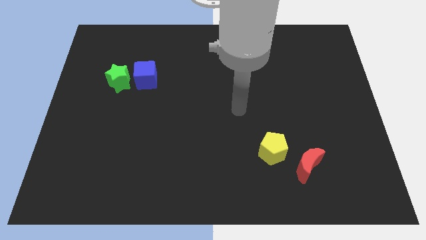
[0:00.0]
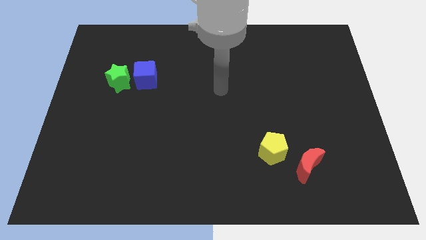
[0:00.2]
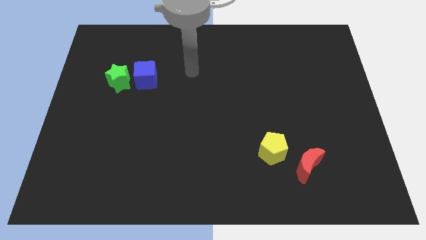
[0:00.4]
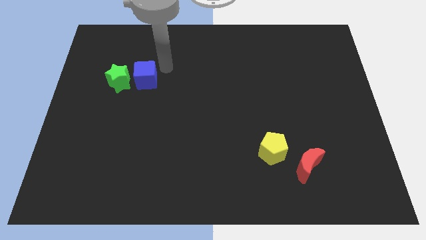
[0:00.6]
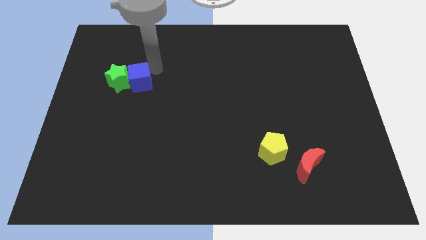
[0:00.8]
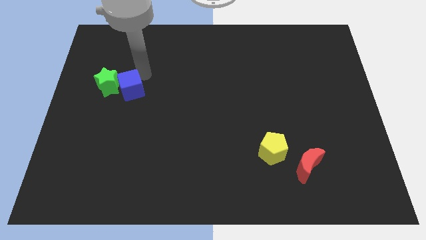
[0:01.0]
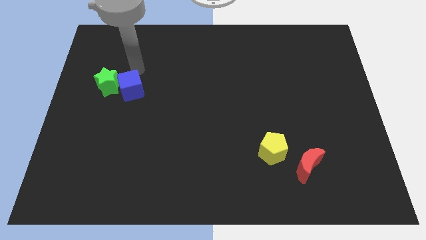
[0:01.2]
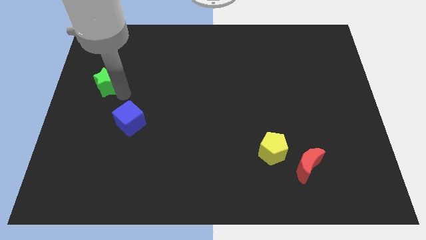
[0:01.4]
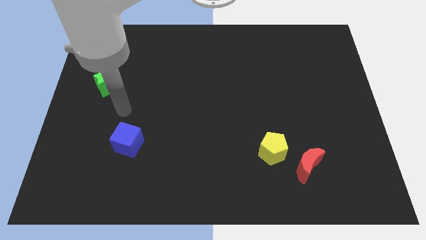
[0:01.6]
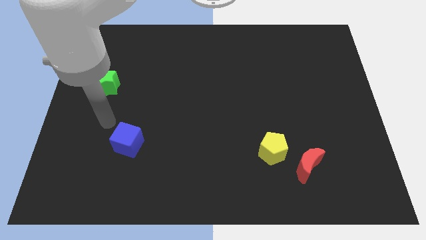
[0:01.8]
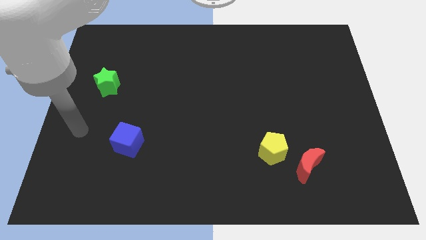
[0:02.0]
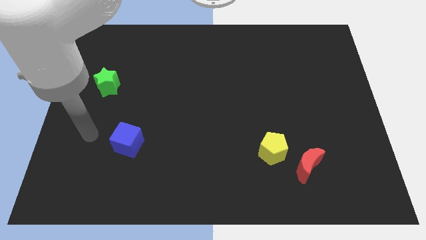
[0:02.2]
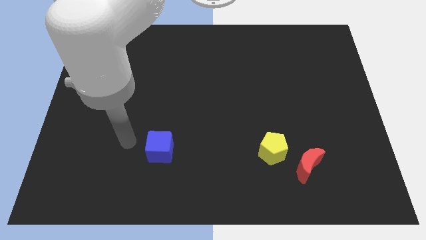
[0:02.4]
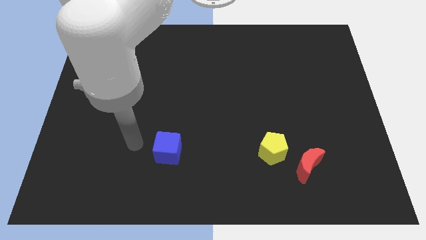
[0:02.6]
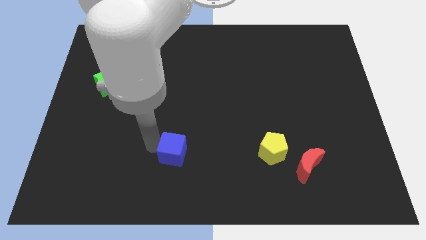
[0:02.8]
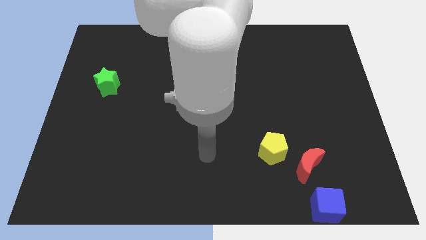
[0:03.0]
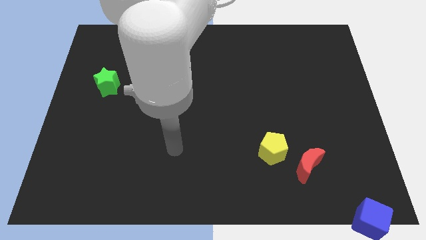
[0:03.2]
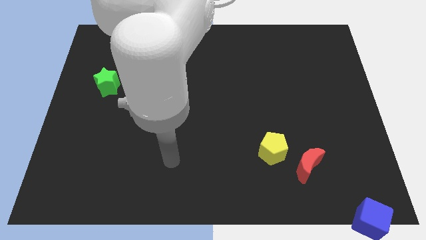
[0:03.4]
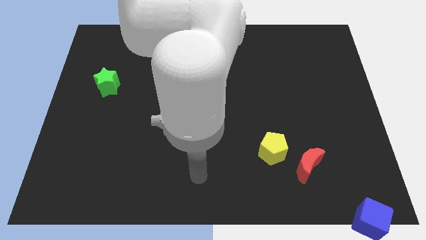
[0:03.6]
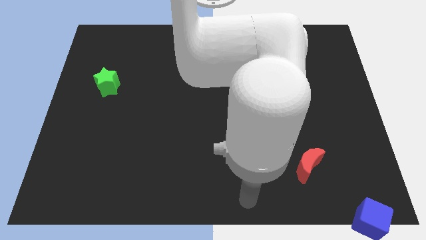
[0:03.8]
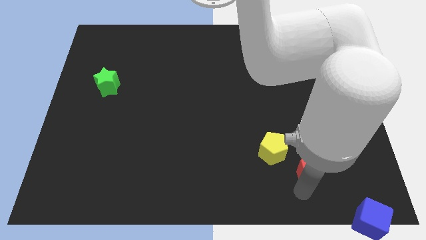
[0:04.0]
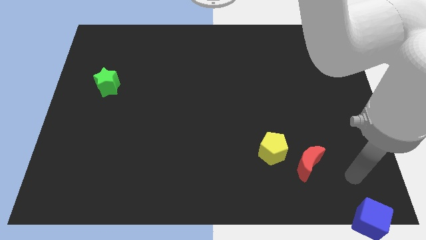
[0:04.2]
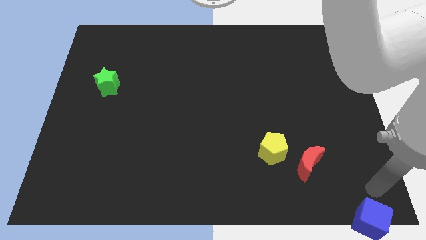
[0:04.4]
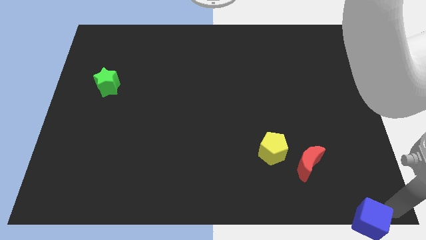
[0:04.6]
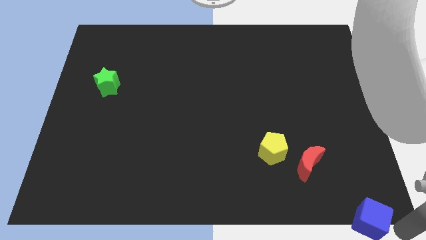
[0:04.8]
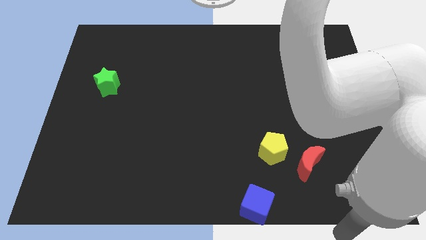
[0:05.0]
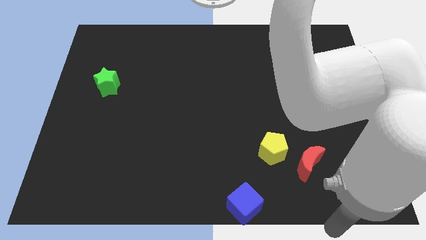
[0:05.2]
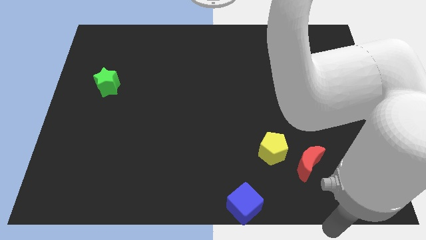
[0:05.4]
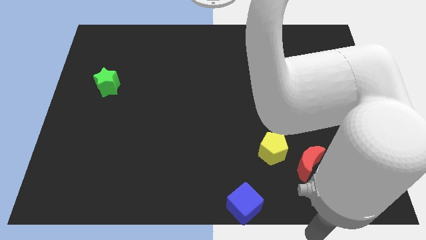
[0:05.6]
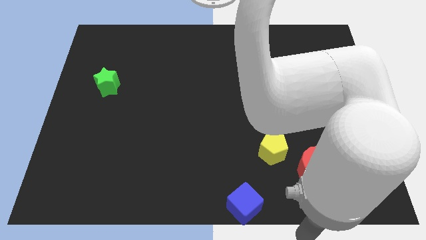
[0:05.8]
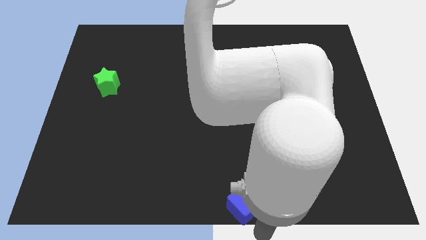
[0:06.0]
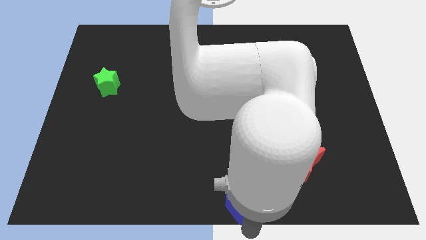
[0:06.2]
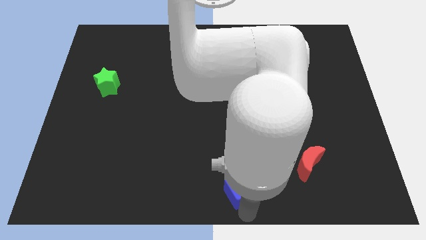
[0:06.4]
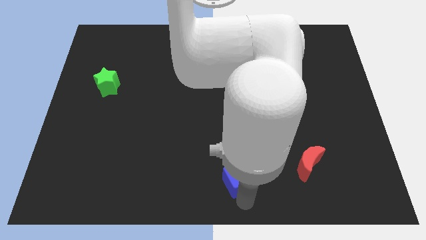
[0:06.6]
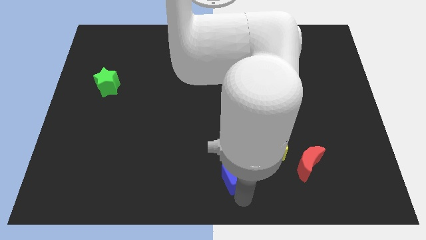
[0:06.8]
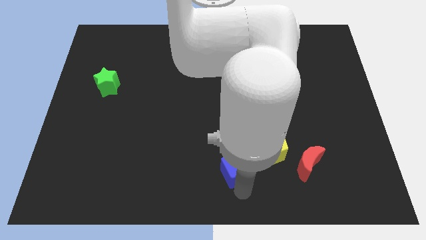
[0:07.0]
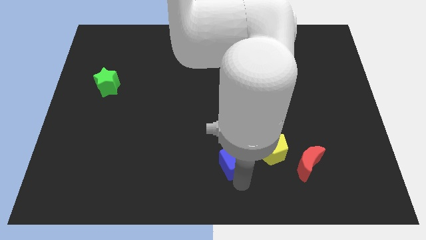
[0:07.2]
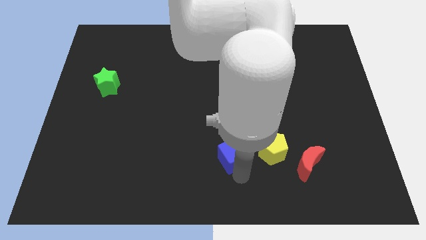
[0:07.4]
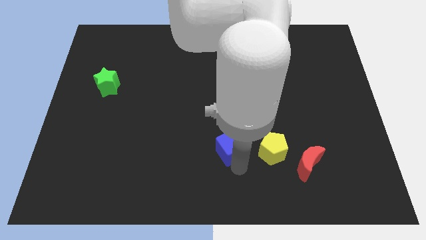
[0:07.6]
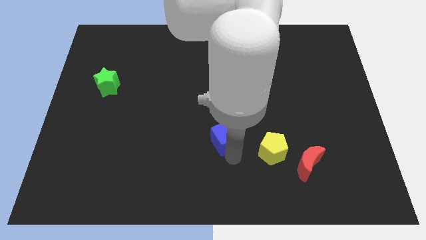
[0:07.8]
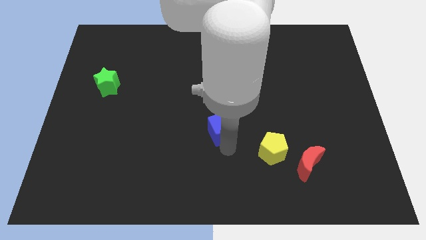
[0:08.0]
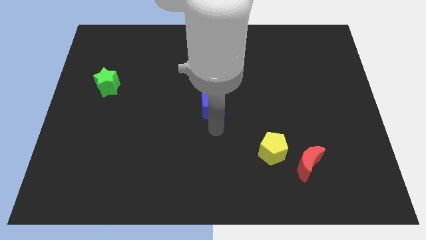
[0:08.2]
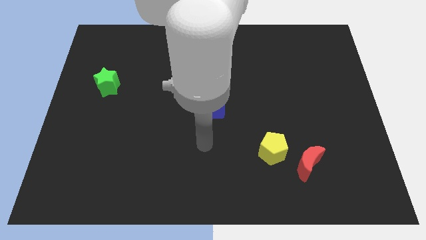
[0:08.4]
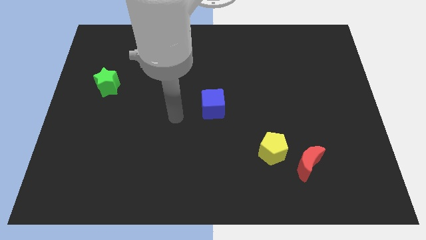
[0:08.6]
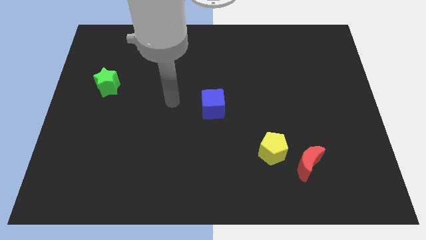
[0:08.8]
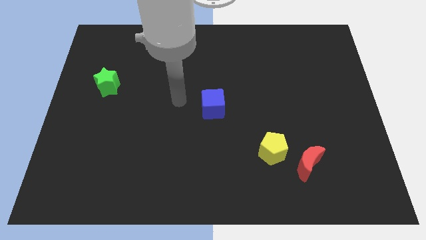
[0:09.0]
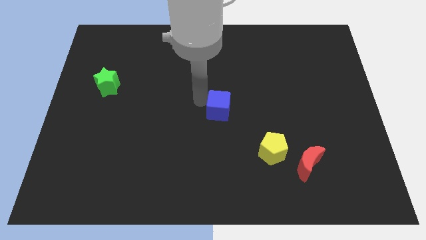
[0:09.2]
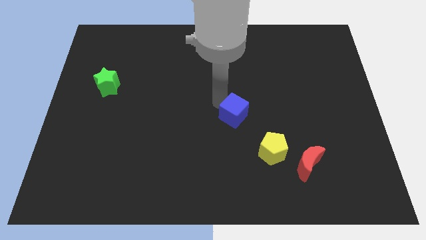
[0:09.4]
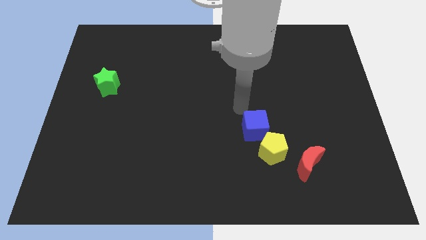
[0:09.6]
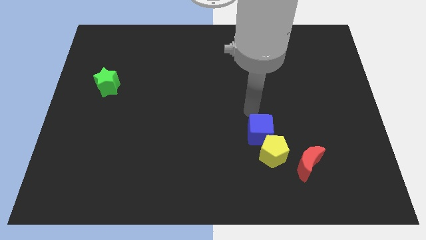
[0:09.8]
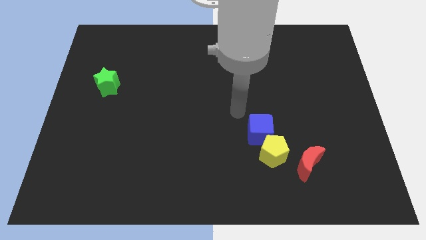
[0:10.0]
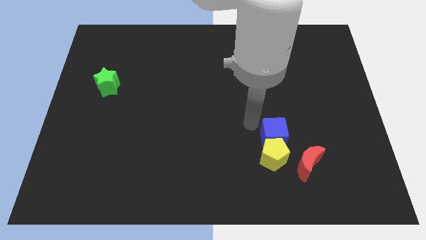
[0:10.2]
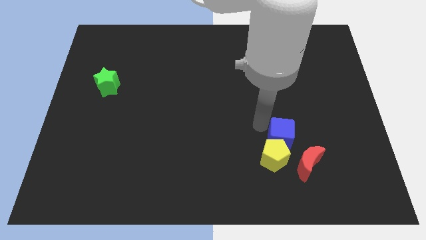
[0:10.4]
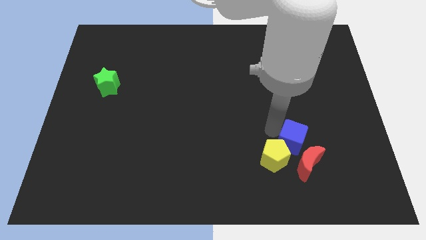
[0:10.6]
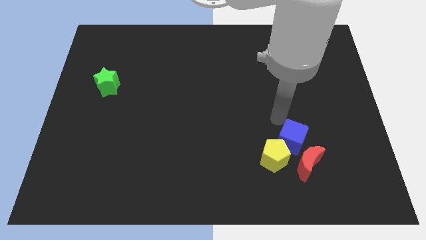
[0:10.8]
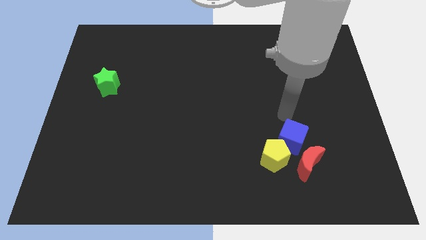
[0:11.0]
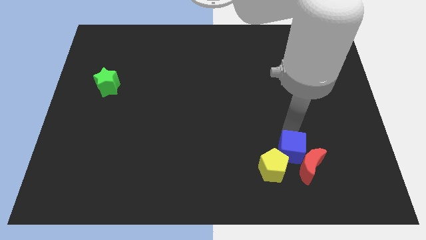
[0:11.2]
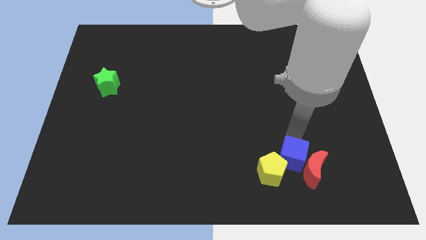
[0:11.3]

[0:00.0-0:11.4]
put the cube towards the red moon

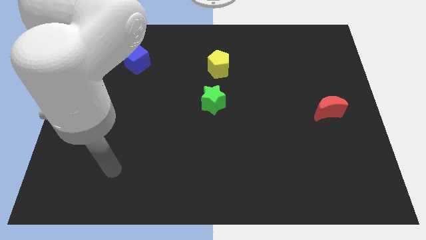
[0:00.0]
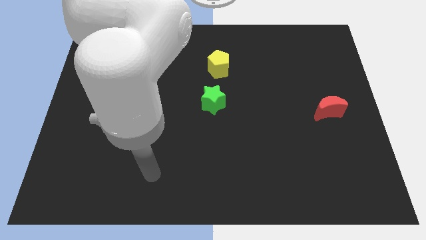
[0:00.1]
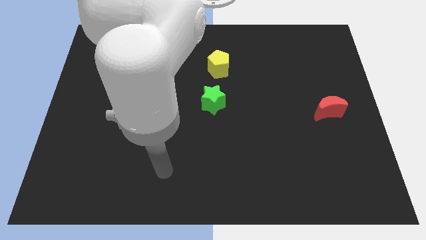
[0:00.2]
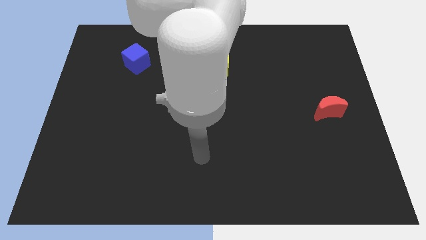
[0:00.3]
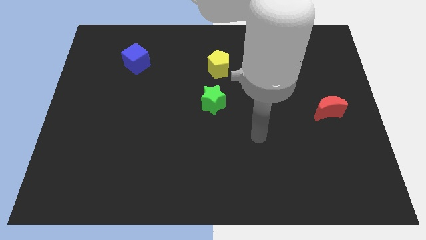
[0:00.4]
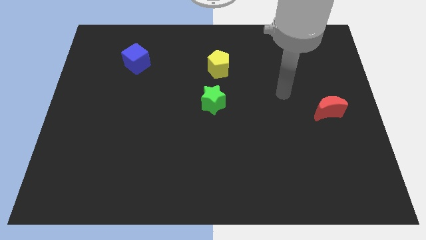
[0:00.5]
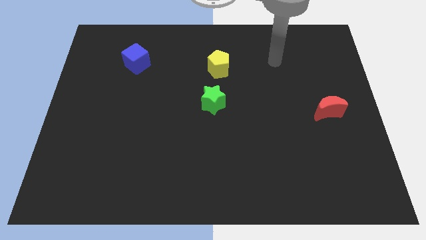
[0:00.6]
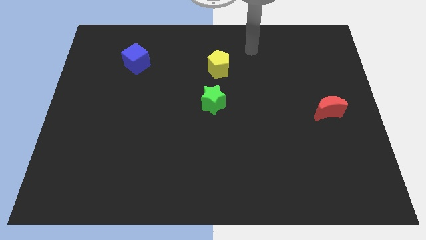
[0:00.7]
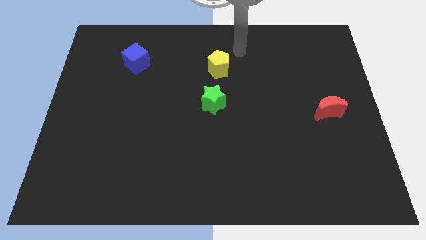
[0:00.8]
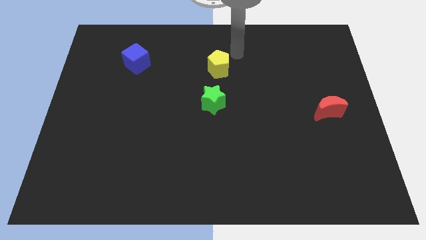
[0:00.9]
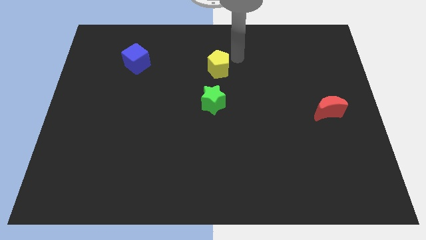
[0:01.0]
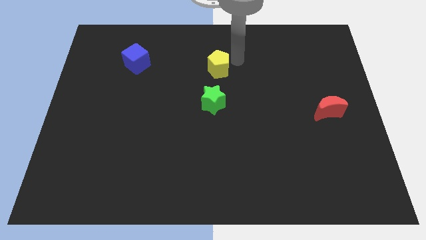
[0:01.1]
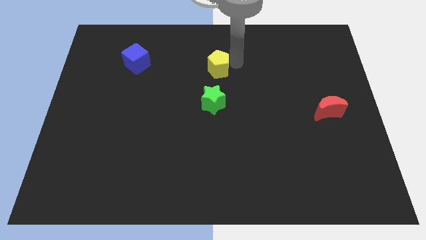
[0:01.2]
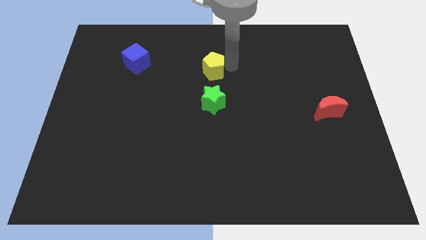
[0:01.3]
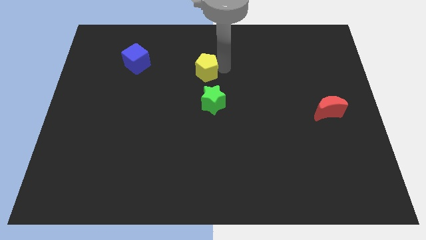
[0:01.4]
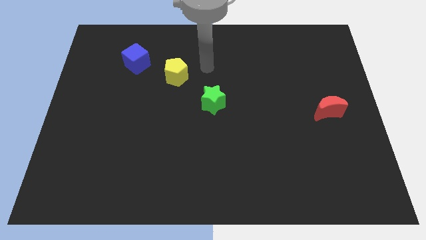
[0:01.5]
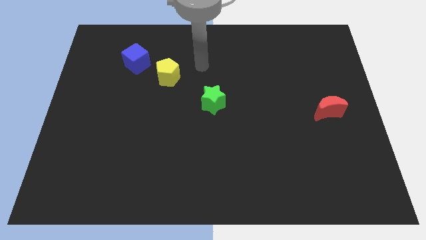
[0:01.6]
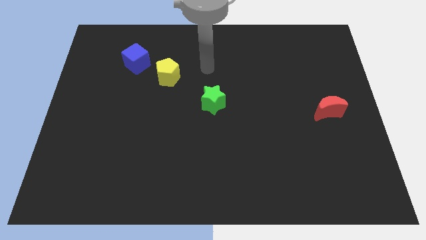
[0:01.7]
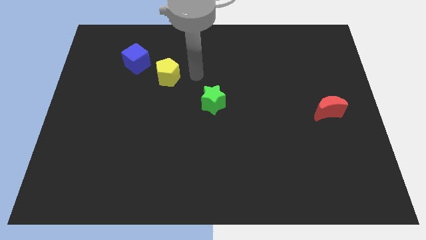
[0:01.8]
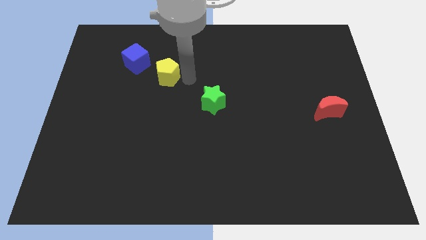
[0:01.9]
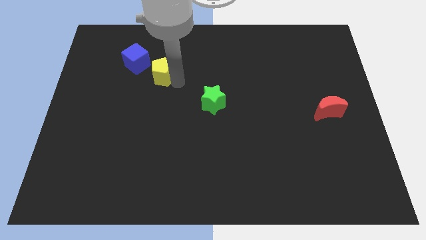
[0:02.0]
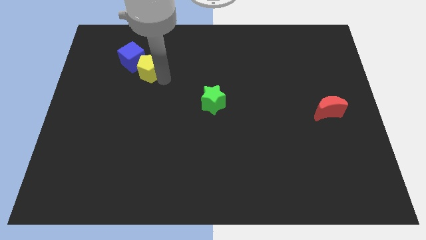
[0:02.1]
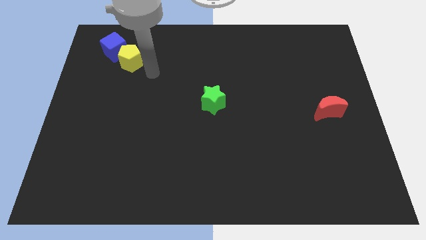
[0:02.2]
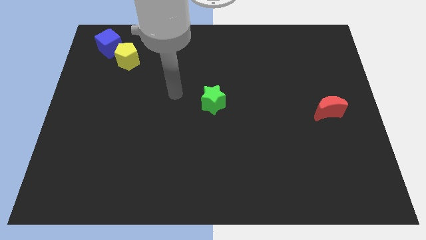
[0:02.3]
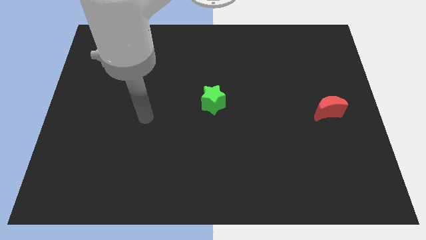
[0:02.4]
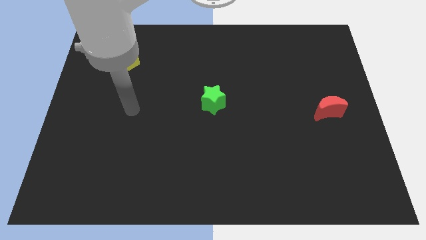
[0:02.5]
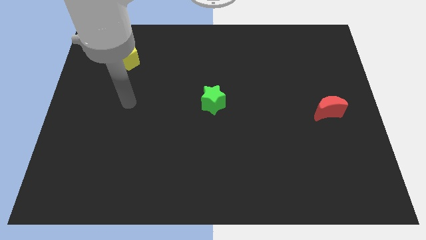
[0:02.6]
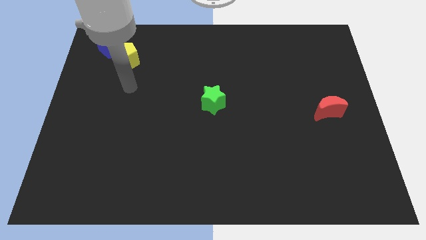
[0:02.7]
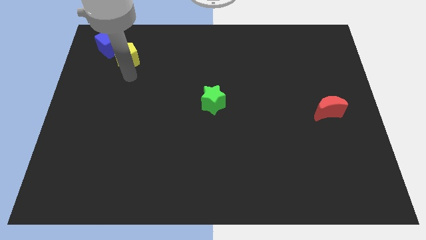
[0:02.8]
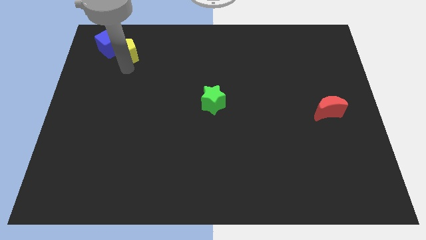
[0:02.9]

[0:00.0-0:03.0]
put the pentagon close to the blue block
